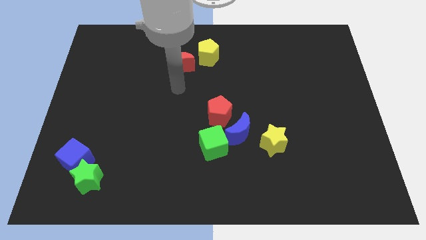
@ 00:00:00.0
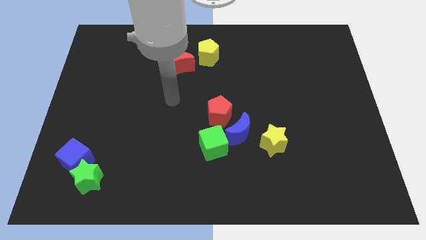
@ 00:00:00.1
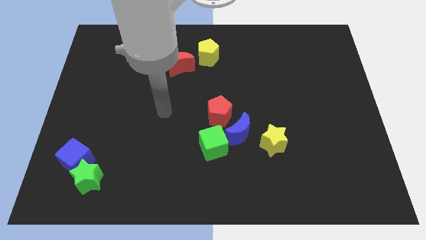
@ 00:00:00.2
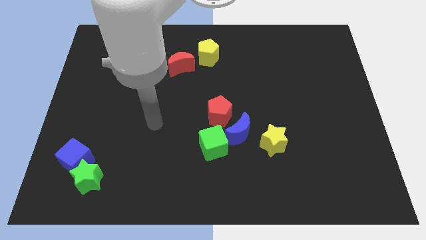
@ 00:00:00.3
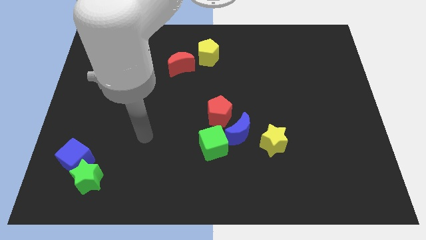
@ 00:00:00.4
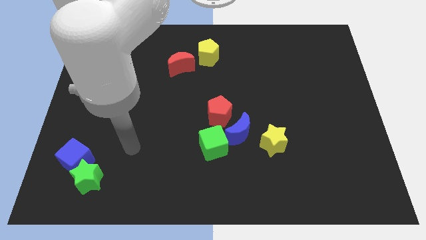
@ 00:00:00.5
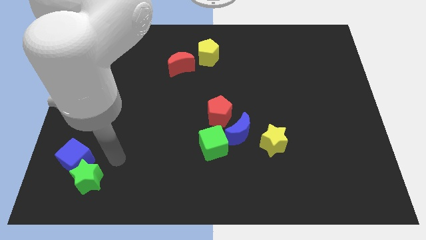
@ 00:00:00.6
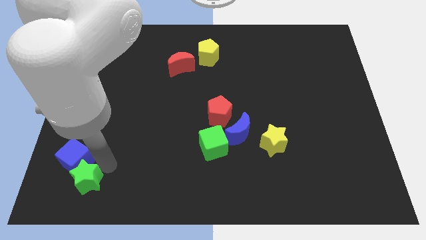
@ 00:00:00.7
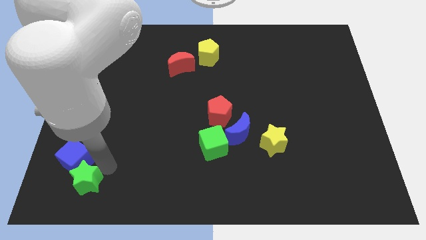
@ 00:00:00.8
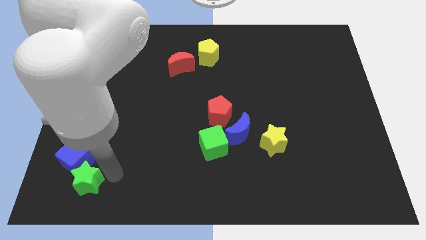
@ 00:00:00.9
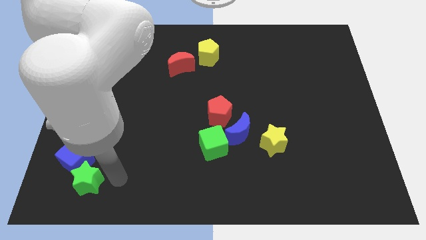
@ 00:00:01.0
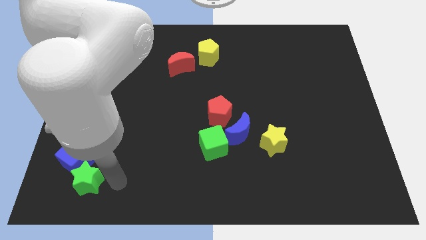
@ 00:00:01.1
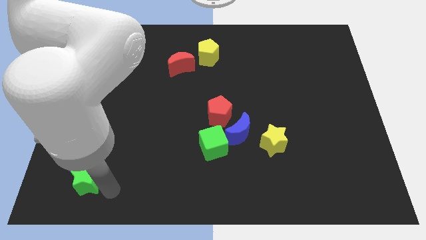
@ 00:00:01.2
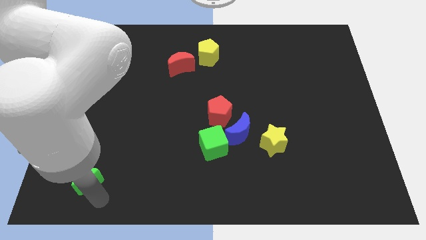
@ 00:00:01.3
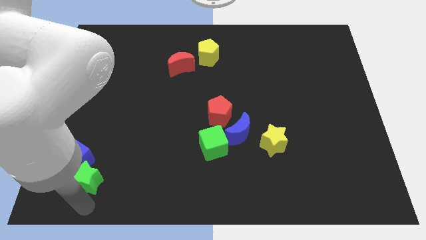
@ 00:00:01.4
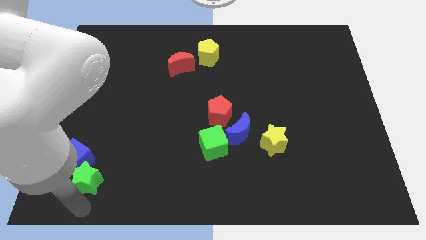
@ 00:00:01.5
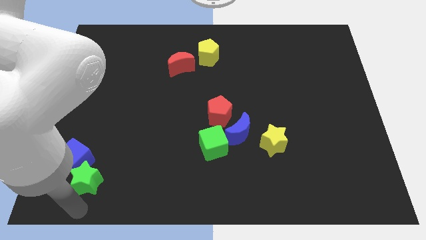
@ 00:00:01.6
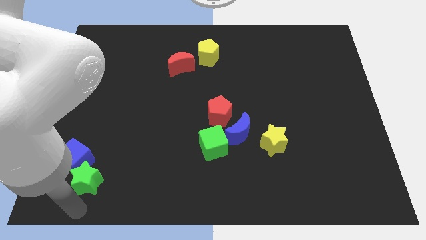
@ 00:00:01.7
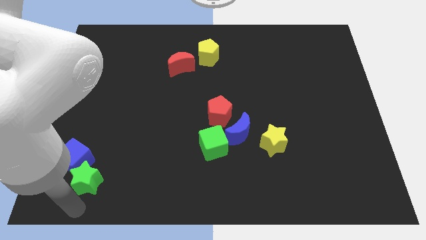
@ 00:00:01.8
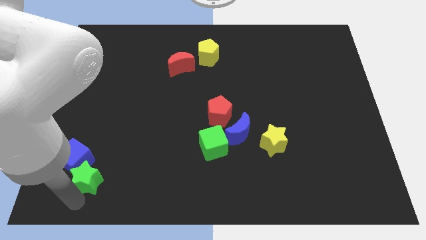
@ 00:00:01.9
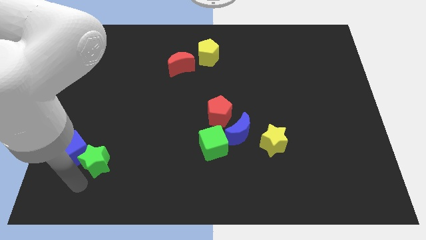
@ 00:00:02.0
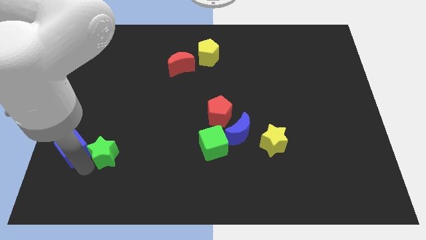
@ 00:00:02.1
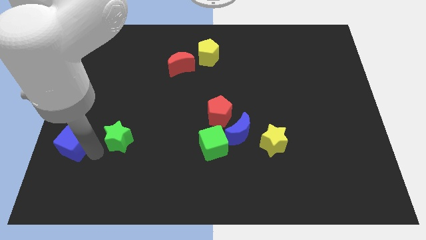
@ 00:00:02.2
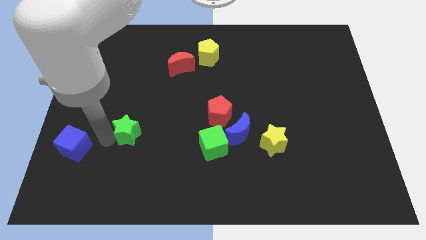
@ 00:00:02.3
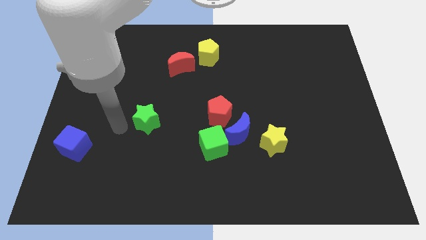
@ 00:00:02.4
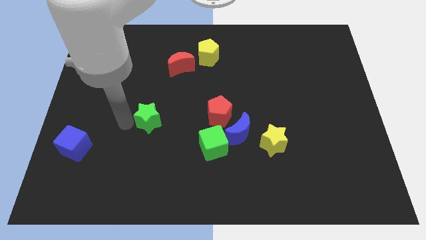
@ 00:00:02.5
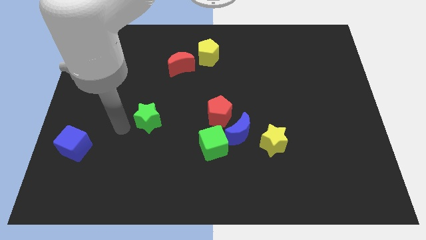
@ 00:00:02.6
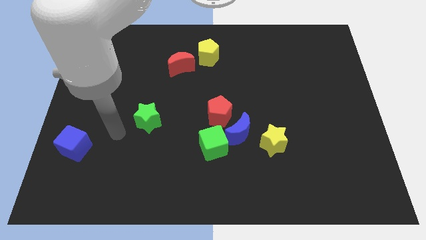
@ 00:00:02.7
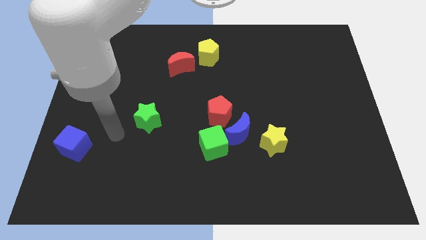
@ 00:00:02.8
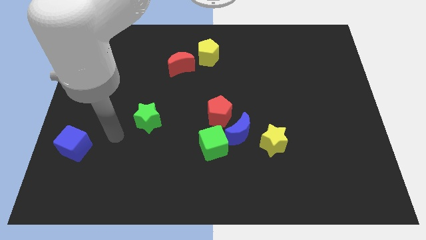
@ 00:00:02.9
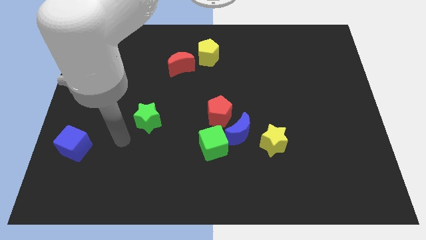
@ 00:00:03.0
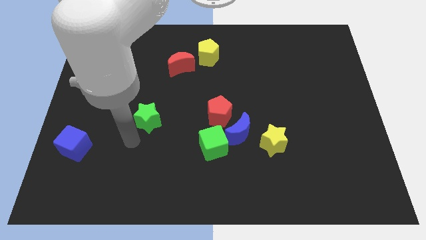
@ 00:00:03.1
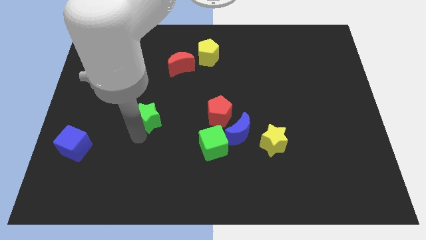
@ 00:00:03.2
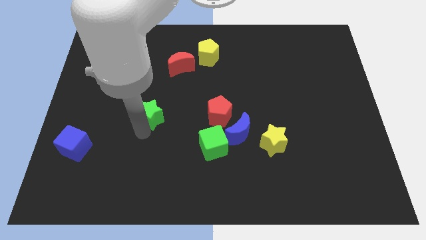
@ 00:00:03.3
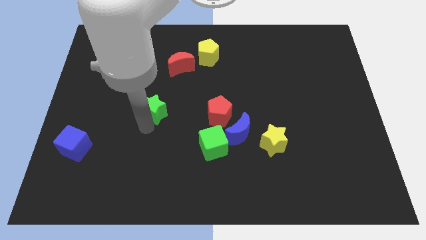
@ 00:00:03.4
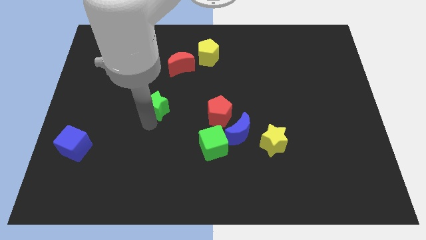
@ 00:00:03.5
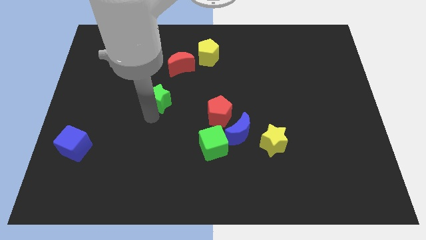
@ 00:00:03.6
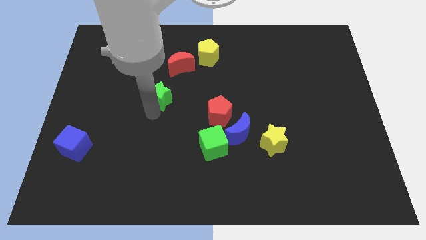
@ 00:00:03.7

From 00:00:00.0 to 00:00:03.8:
separate the green star from the blue cube

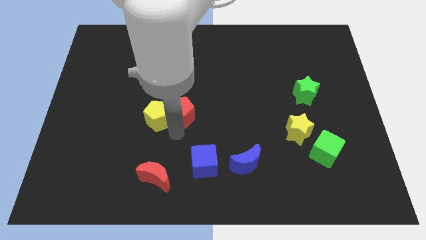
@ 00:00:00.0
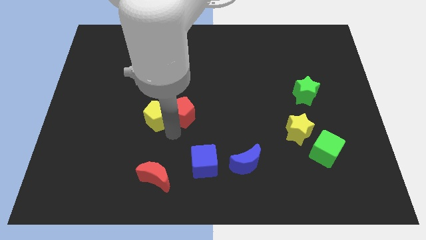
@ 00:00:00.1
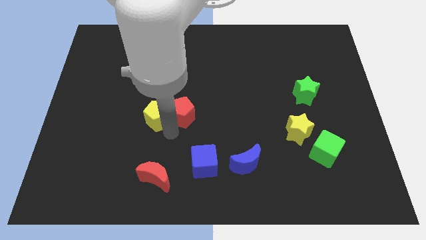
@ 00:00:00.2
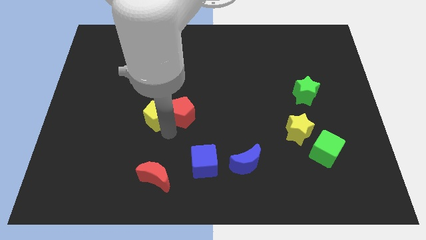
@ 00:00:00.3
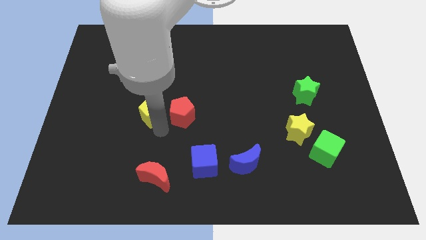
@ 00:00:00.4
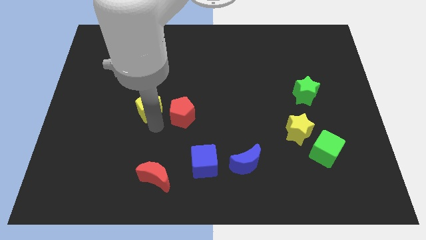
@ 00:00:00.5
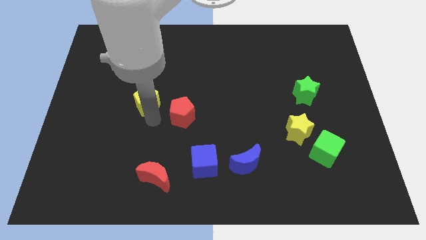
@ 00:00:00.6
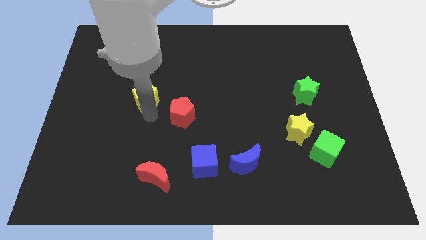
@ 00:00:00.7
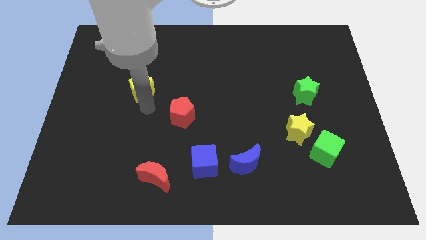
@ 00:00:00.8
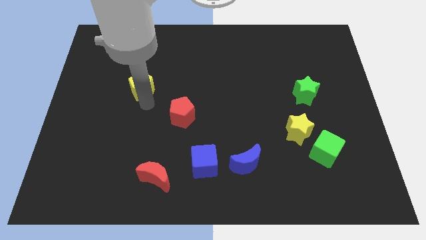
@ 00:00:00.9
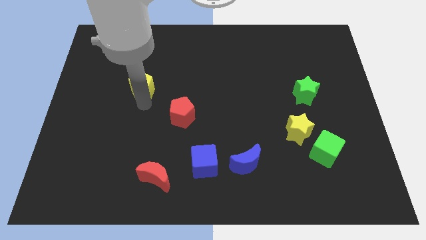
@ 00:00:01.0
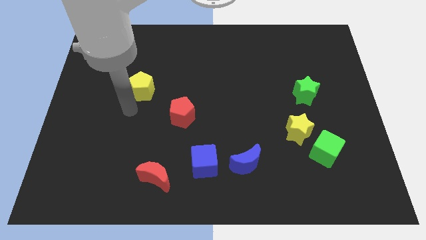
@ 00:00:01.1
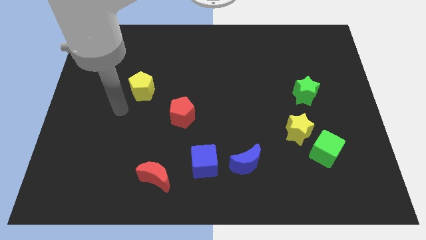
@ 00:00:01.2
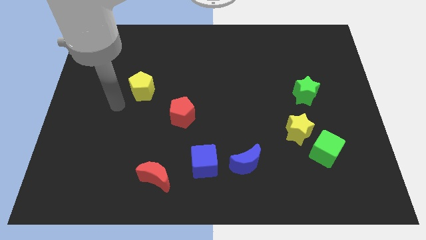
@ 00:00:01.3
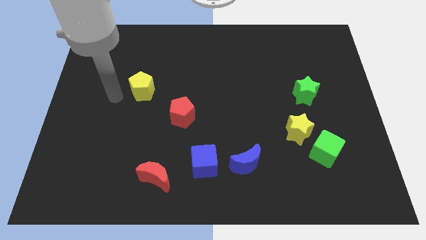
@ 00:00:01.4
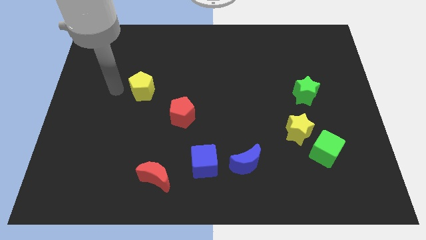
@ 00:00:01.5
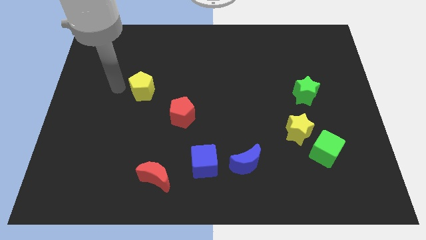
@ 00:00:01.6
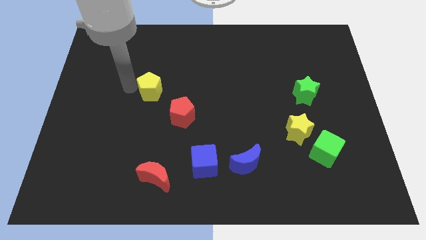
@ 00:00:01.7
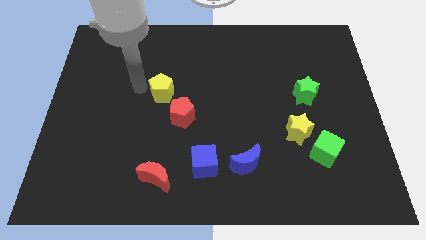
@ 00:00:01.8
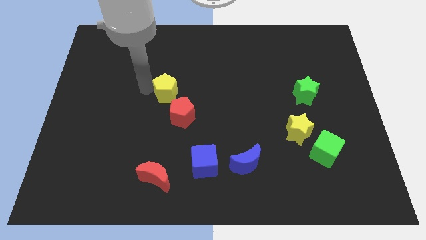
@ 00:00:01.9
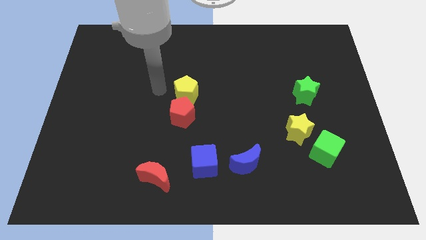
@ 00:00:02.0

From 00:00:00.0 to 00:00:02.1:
move the yellow pentagon to the top of the red pentagon

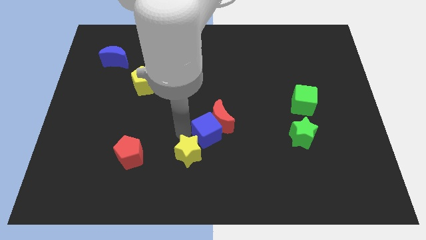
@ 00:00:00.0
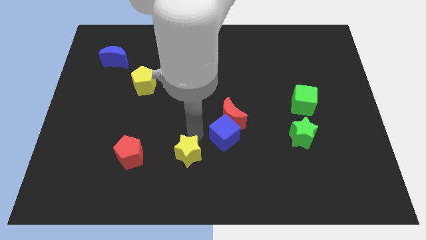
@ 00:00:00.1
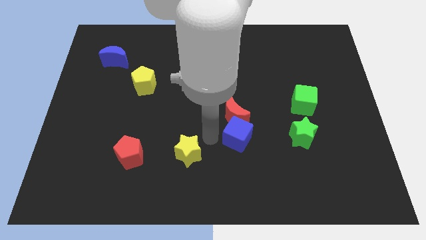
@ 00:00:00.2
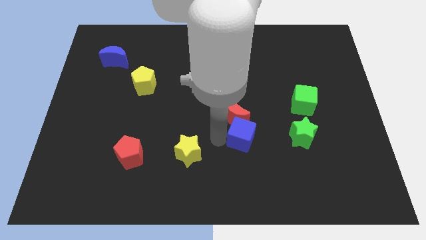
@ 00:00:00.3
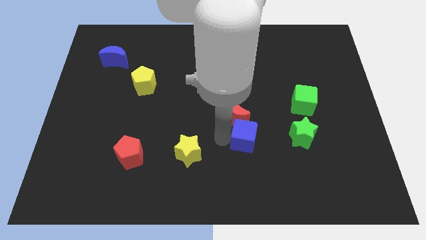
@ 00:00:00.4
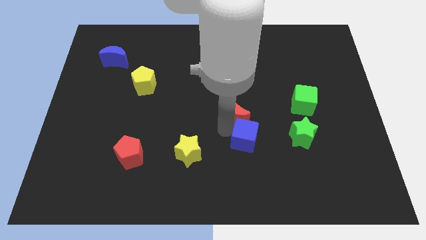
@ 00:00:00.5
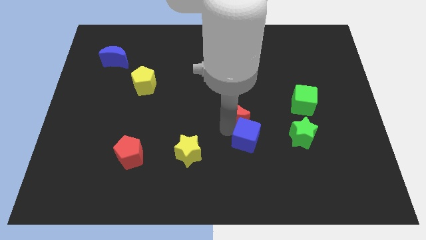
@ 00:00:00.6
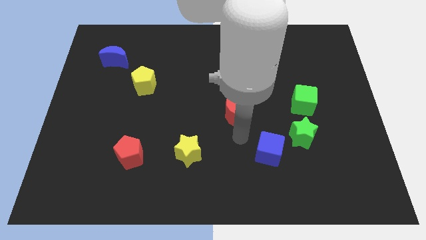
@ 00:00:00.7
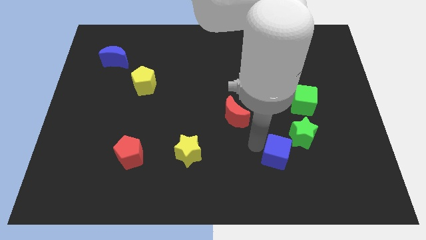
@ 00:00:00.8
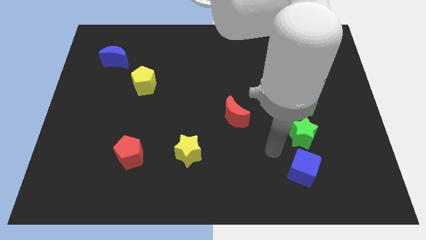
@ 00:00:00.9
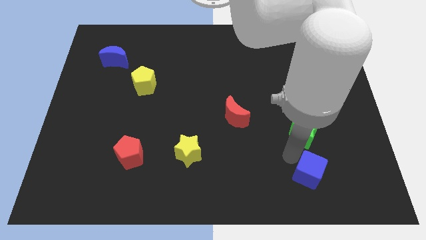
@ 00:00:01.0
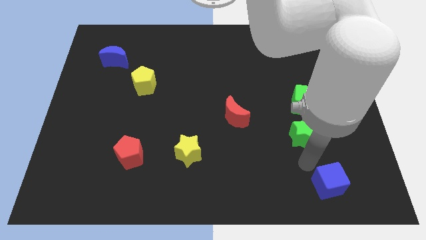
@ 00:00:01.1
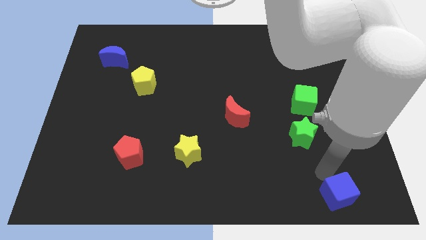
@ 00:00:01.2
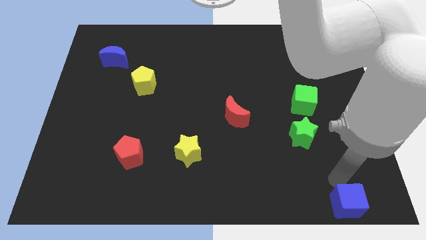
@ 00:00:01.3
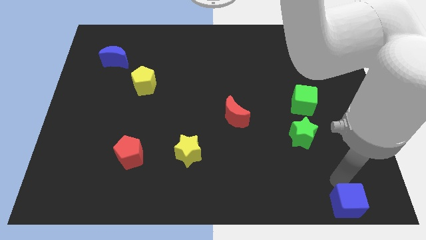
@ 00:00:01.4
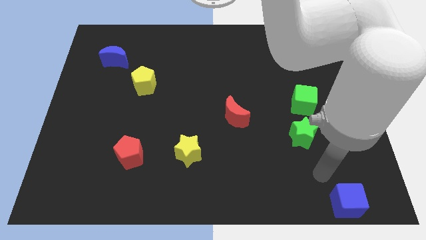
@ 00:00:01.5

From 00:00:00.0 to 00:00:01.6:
move the blue cube diagonally bottom right to the green star

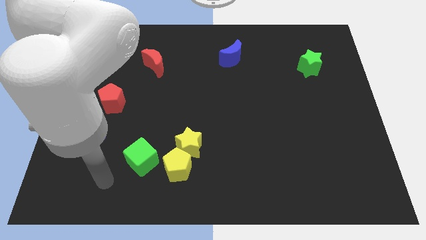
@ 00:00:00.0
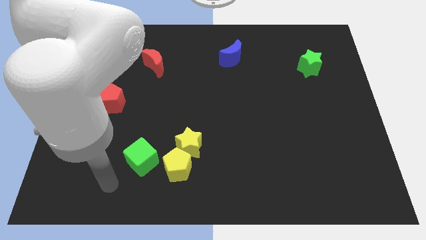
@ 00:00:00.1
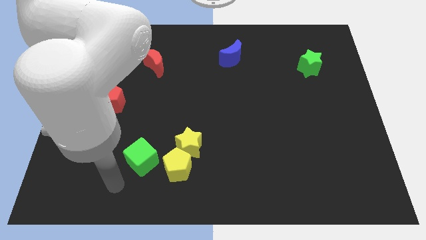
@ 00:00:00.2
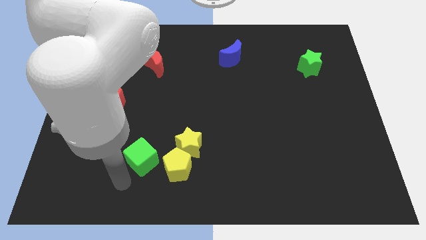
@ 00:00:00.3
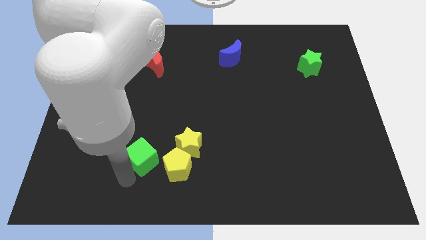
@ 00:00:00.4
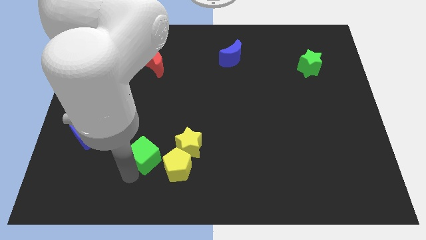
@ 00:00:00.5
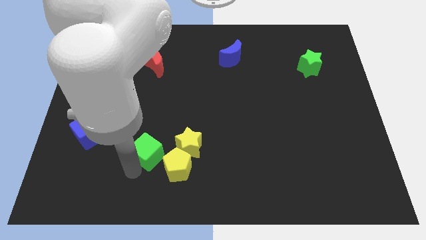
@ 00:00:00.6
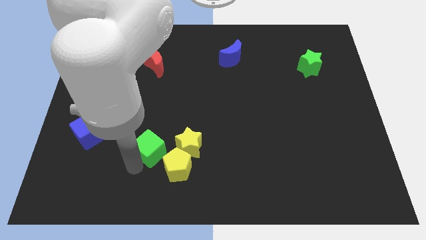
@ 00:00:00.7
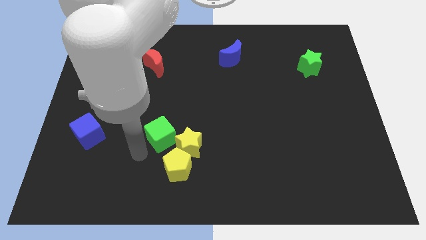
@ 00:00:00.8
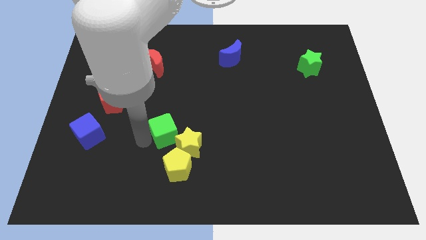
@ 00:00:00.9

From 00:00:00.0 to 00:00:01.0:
move the green cube to the left of the yellow star
